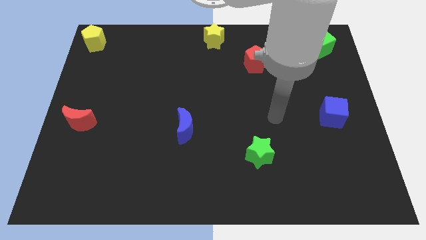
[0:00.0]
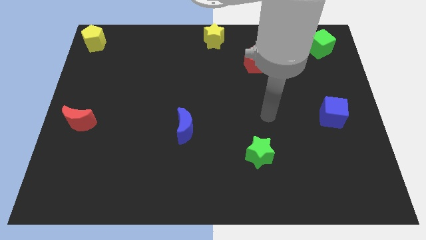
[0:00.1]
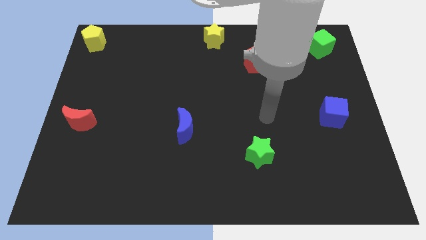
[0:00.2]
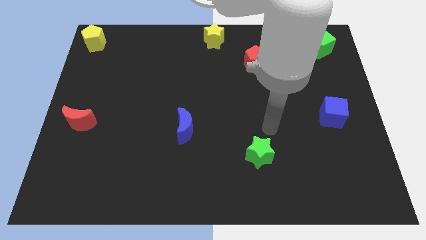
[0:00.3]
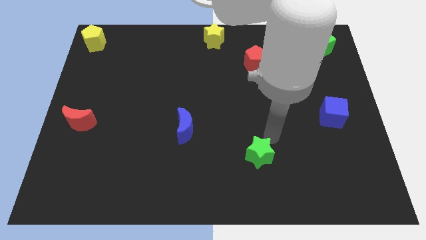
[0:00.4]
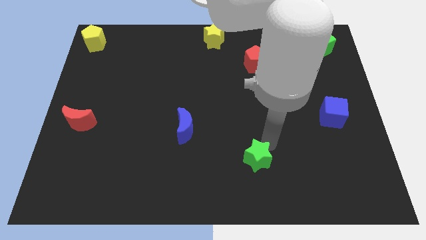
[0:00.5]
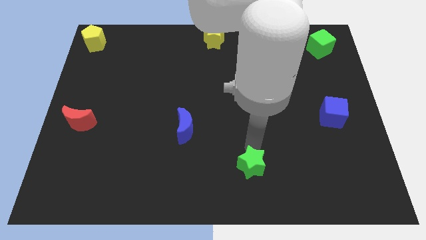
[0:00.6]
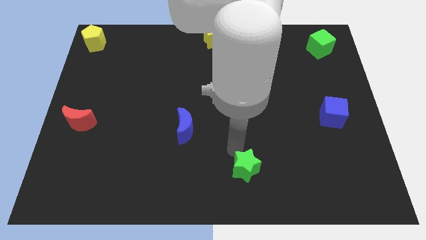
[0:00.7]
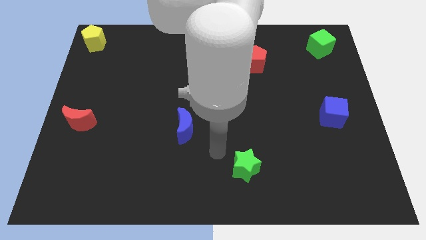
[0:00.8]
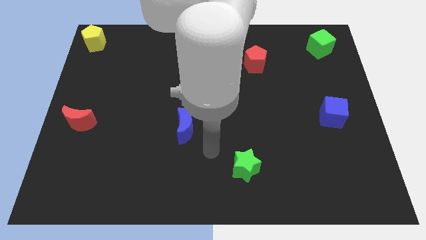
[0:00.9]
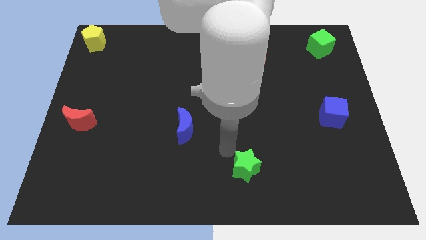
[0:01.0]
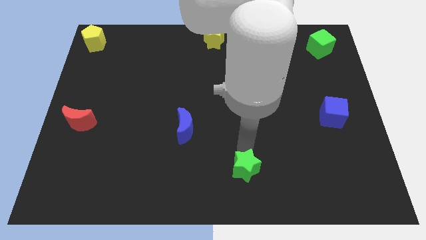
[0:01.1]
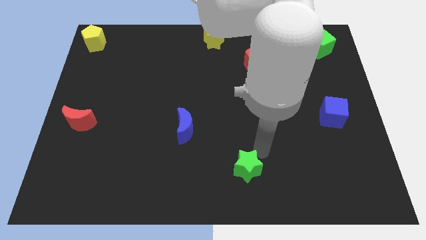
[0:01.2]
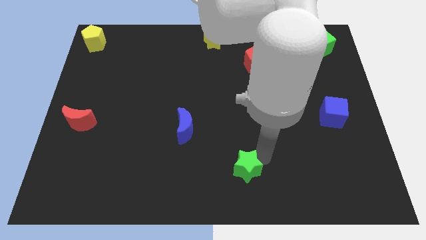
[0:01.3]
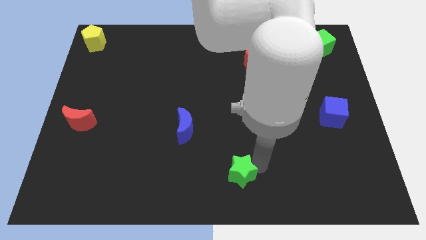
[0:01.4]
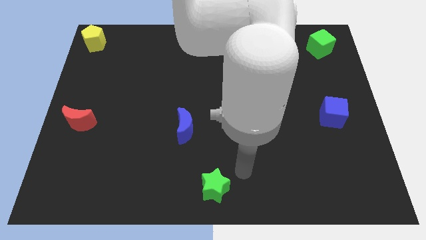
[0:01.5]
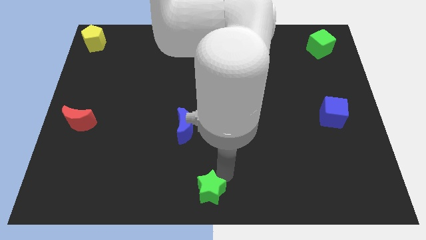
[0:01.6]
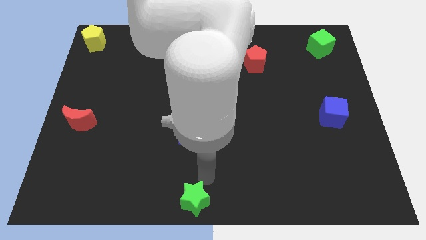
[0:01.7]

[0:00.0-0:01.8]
push the green star to the bottom of the board

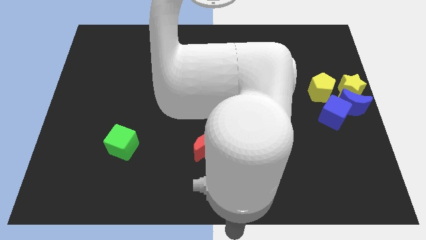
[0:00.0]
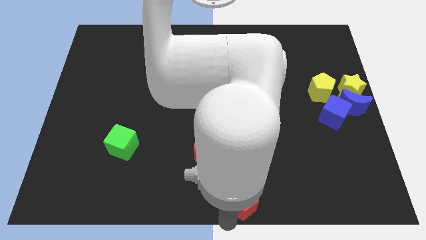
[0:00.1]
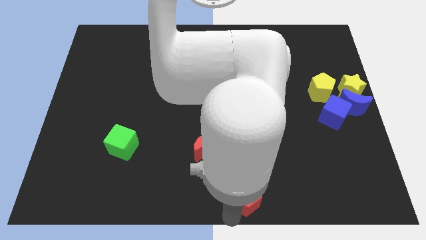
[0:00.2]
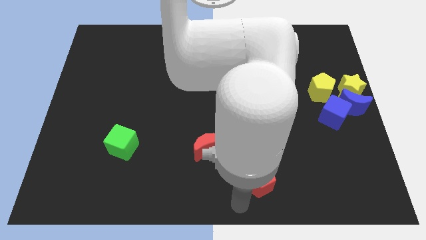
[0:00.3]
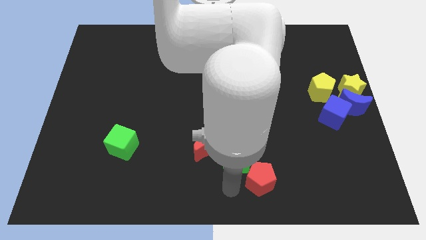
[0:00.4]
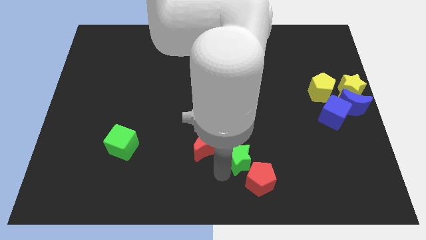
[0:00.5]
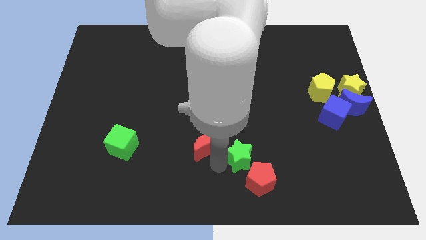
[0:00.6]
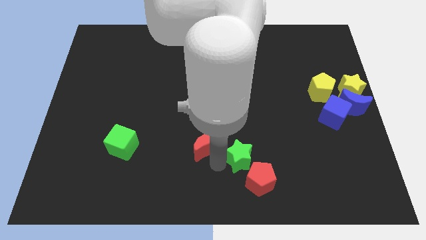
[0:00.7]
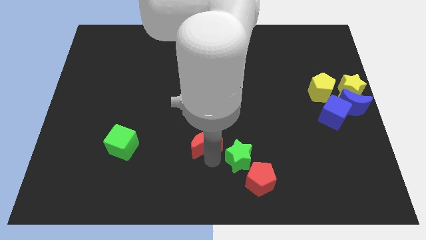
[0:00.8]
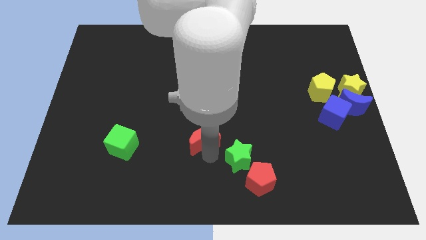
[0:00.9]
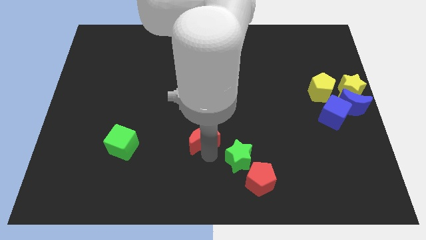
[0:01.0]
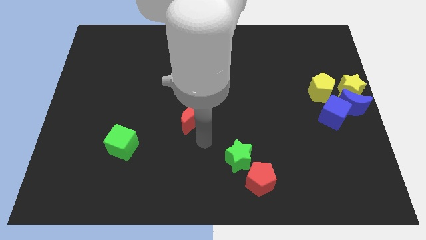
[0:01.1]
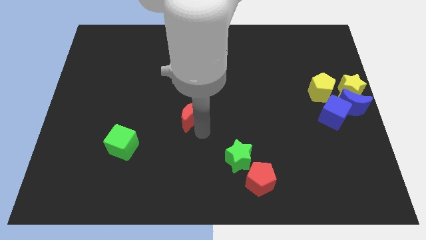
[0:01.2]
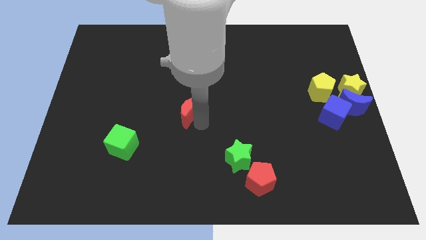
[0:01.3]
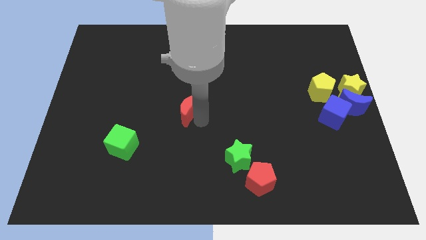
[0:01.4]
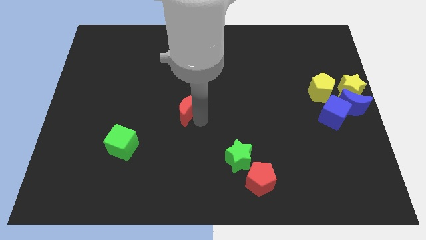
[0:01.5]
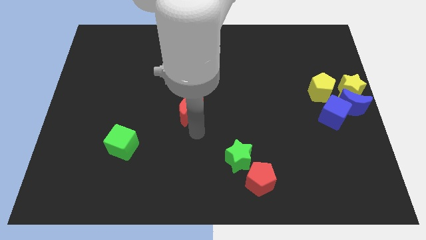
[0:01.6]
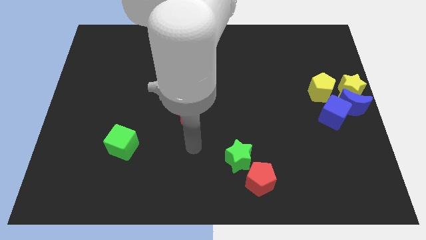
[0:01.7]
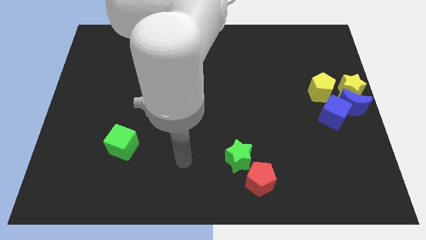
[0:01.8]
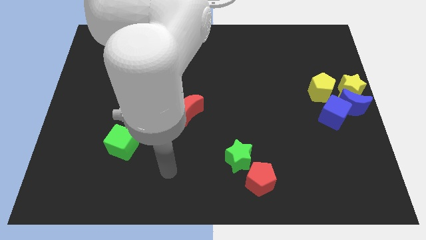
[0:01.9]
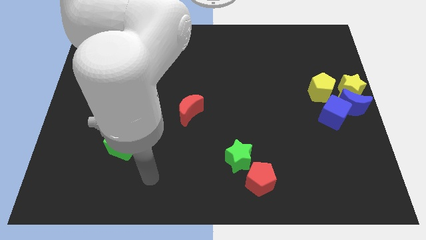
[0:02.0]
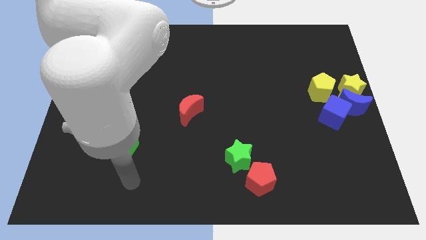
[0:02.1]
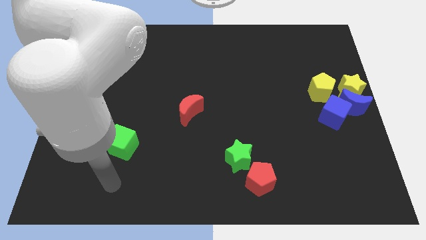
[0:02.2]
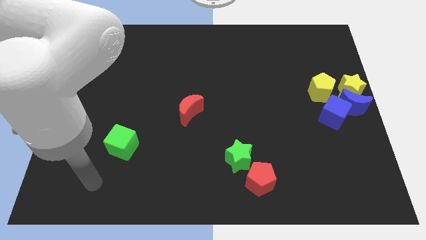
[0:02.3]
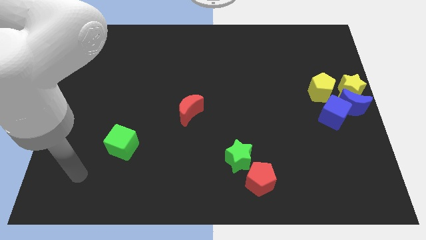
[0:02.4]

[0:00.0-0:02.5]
move the red moon away from the green star

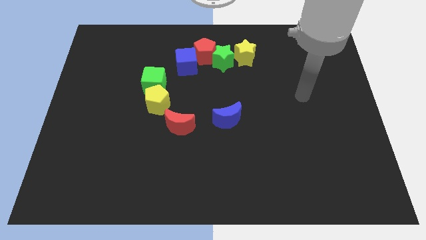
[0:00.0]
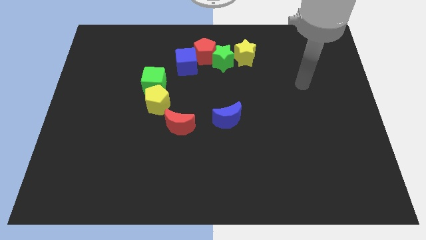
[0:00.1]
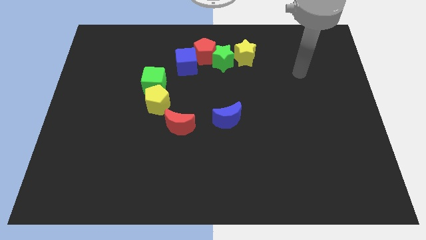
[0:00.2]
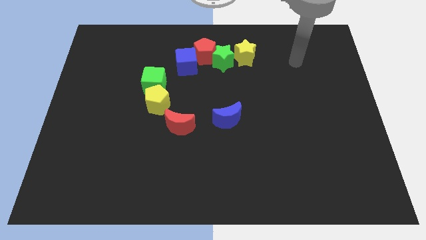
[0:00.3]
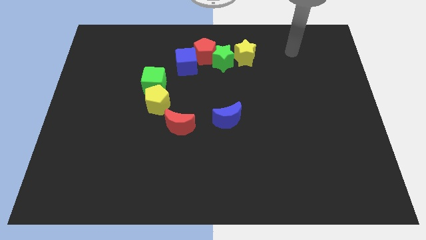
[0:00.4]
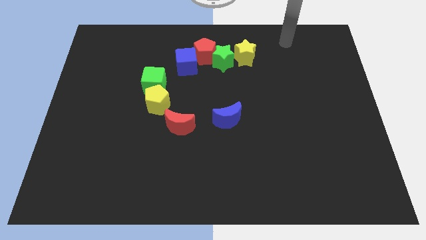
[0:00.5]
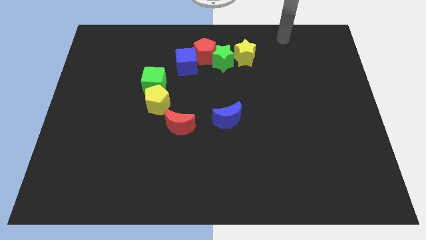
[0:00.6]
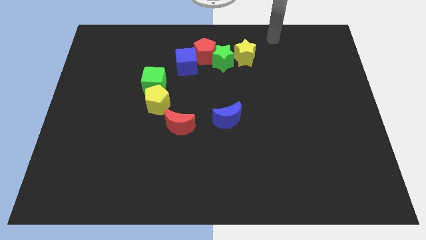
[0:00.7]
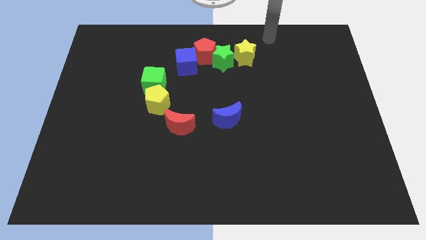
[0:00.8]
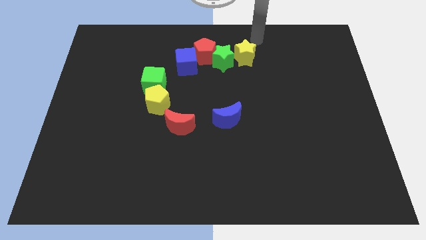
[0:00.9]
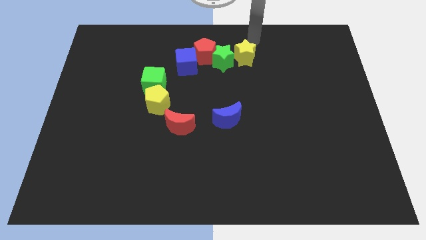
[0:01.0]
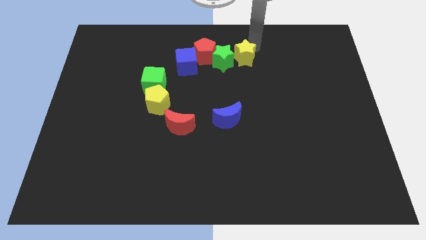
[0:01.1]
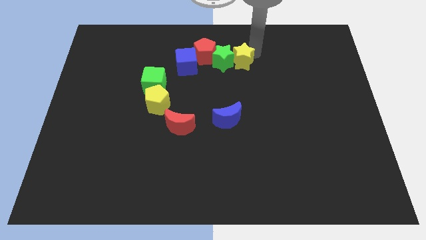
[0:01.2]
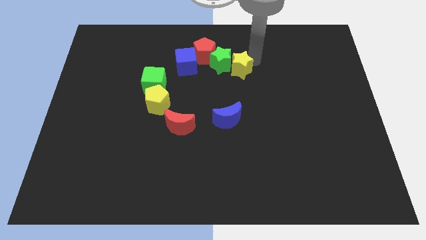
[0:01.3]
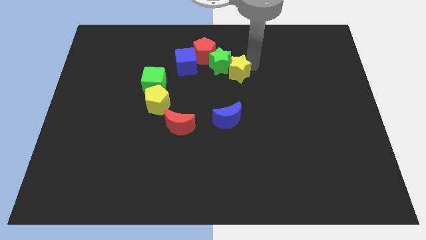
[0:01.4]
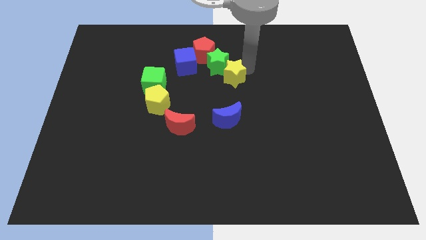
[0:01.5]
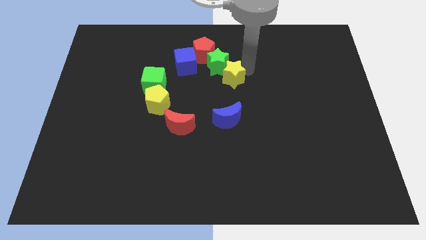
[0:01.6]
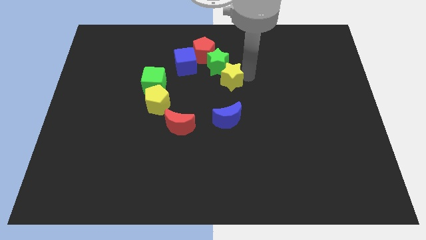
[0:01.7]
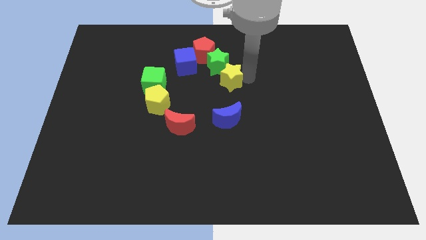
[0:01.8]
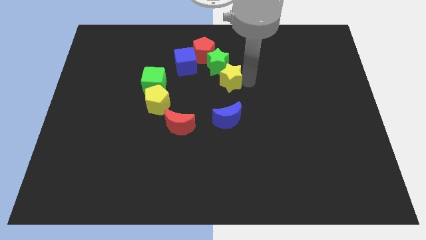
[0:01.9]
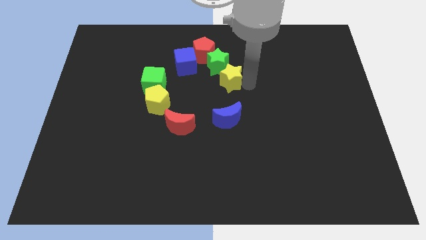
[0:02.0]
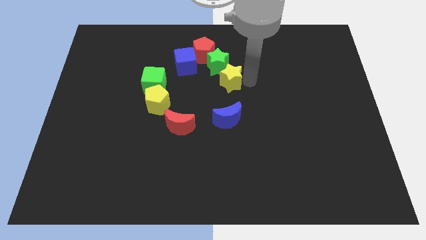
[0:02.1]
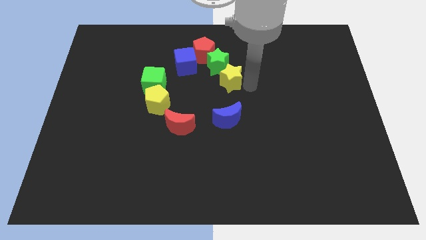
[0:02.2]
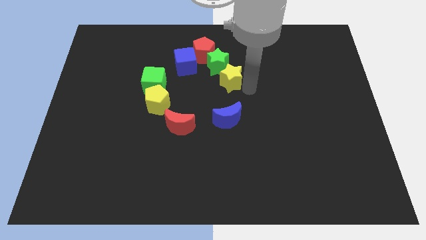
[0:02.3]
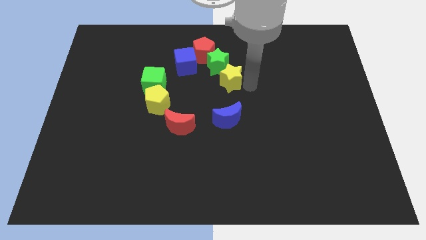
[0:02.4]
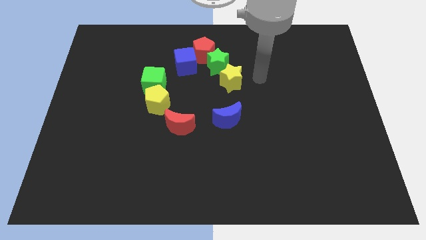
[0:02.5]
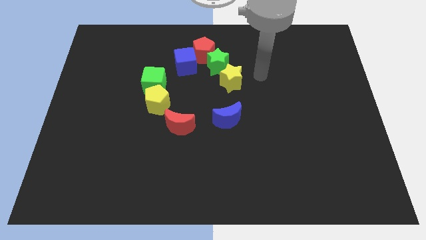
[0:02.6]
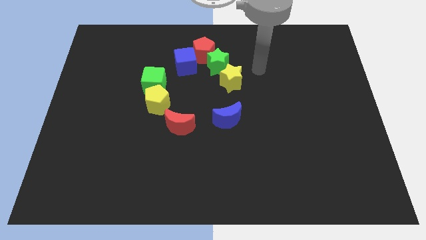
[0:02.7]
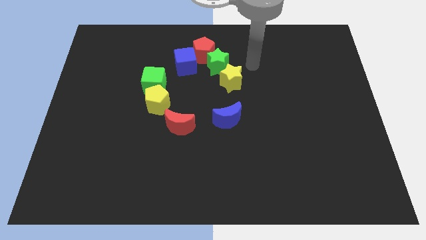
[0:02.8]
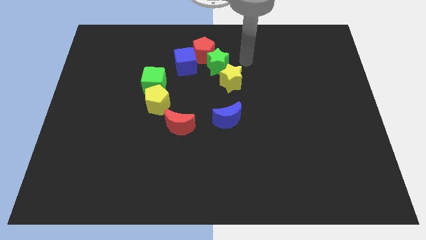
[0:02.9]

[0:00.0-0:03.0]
arrange the yellow star and green star diagonally at the bottom right side of the red pentagon

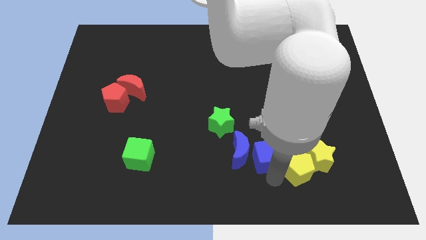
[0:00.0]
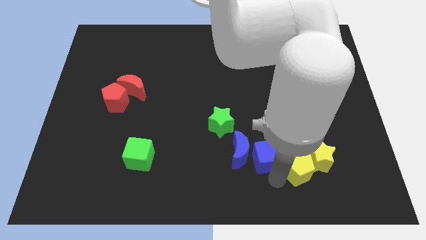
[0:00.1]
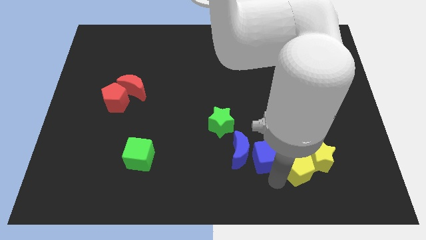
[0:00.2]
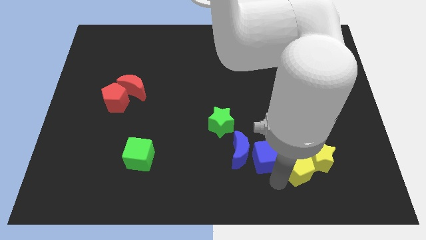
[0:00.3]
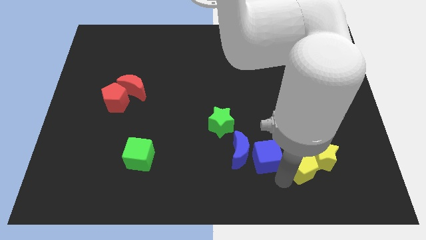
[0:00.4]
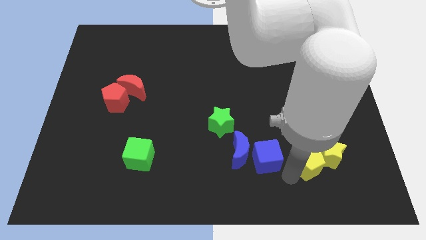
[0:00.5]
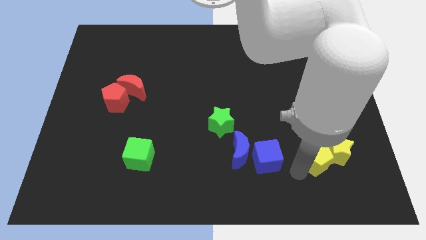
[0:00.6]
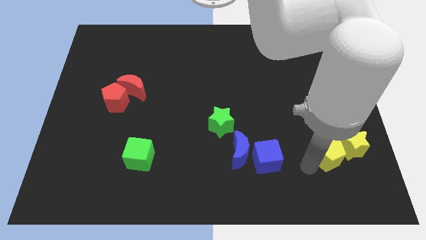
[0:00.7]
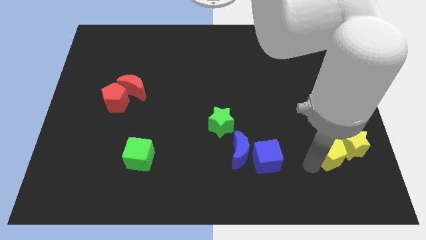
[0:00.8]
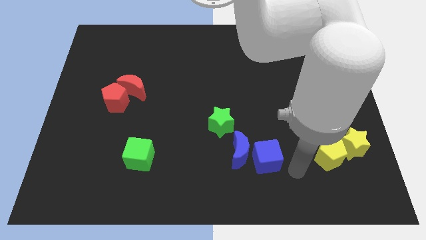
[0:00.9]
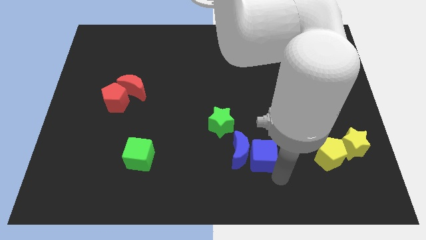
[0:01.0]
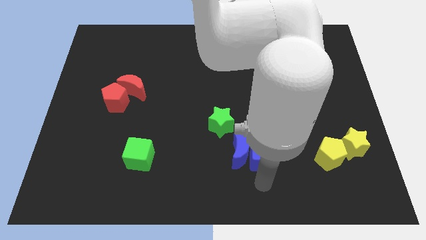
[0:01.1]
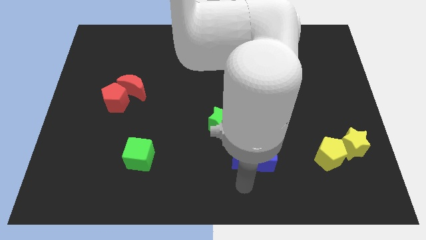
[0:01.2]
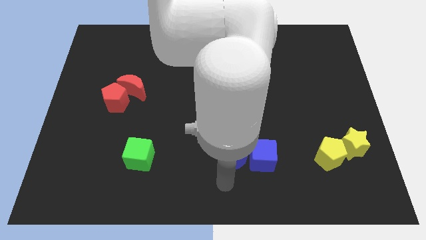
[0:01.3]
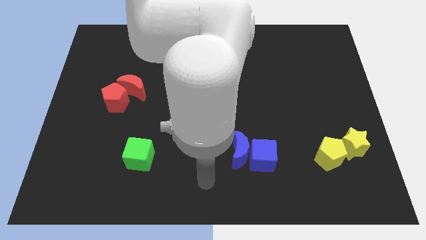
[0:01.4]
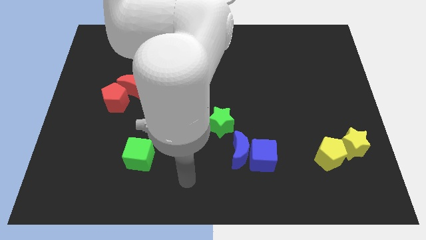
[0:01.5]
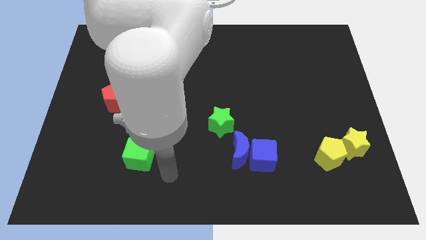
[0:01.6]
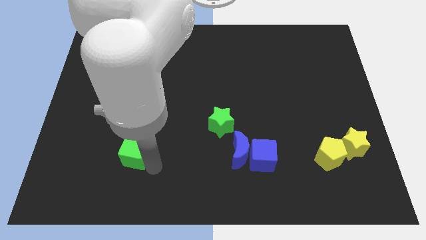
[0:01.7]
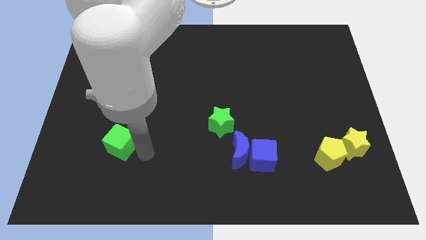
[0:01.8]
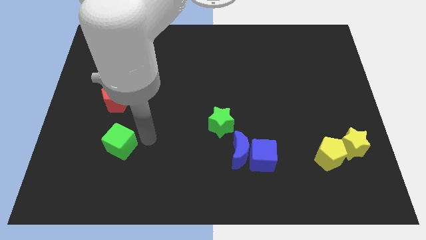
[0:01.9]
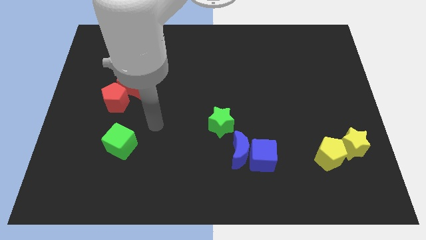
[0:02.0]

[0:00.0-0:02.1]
slide the yellow pentagon and yellow star to the right side
